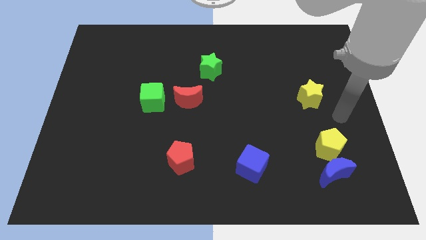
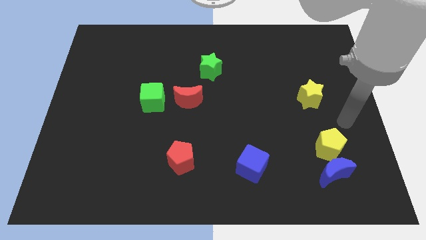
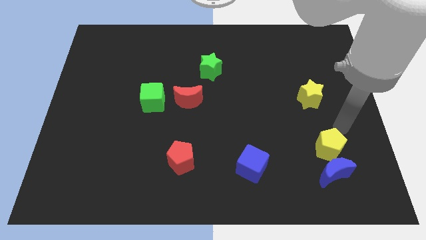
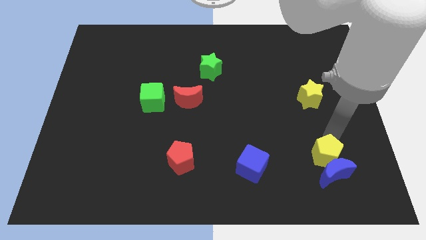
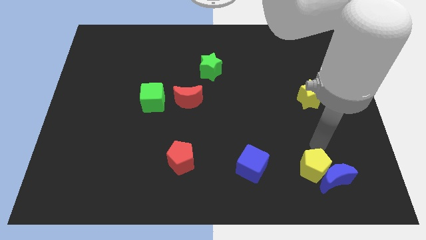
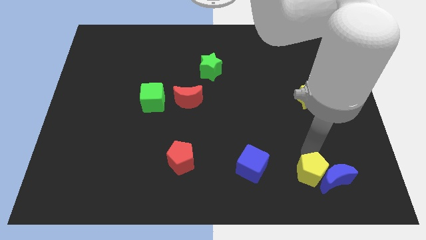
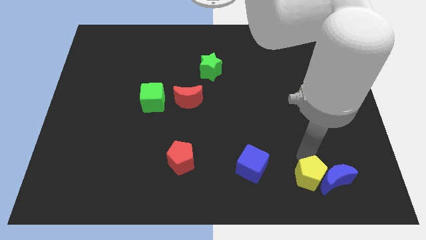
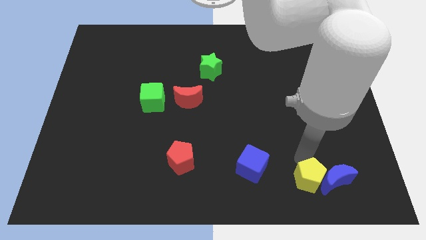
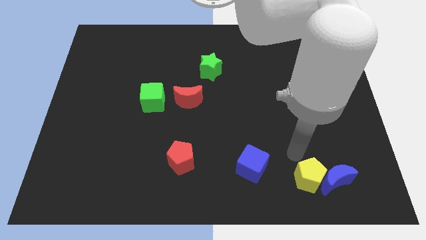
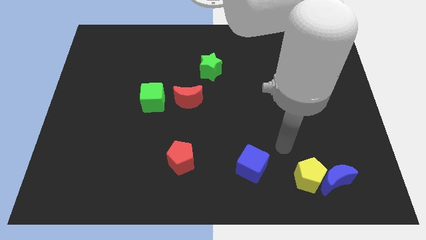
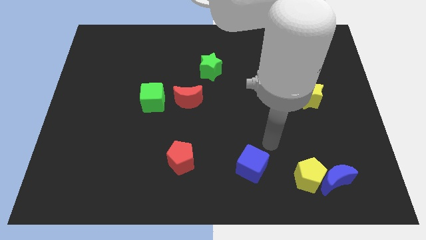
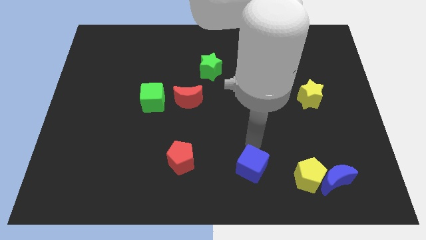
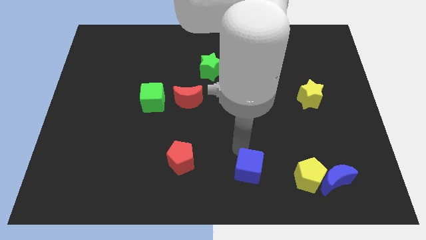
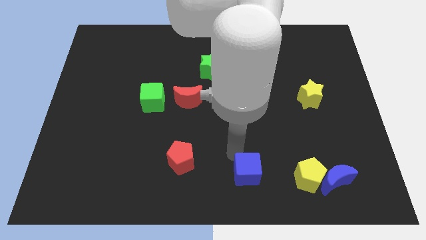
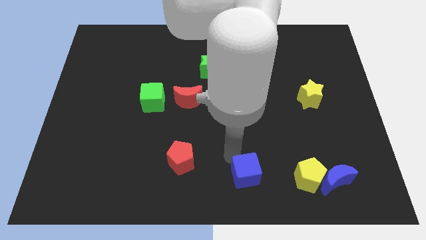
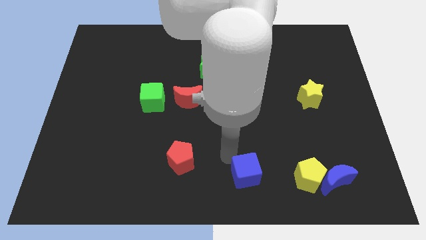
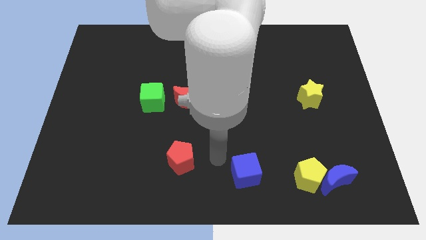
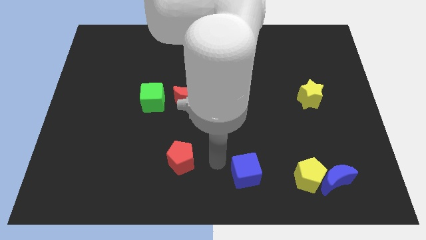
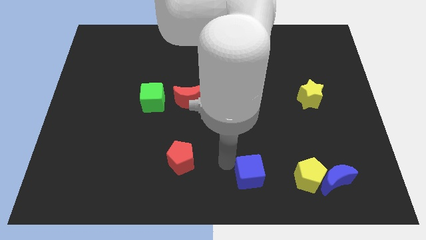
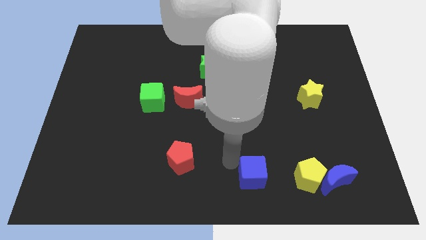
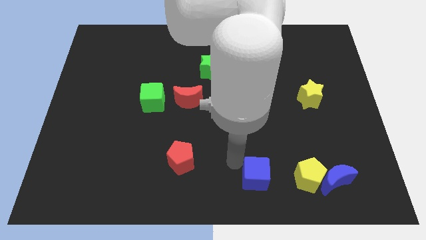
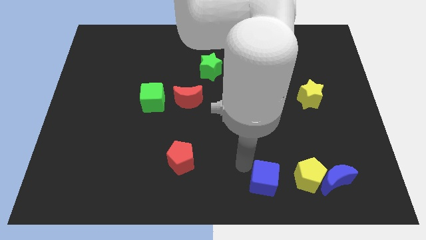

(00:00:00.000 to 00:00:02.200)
slide the blue cube diagonal to the green star

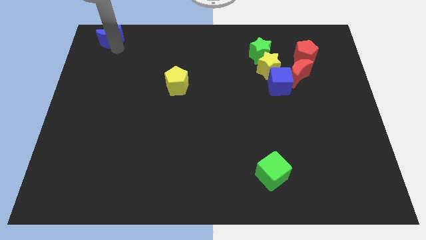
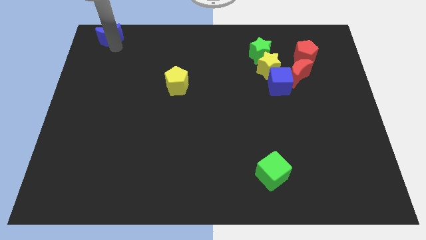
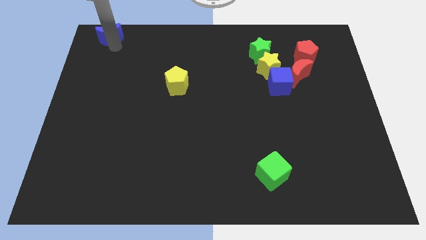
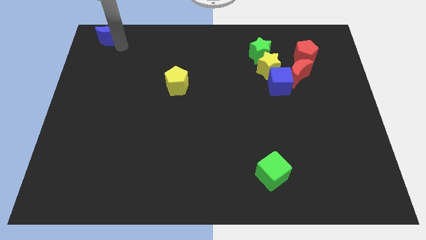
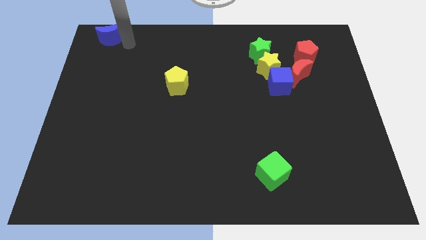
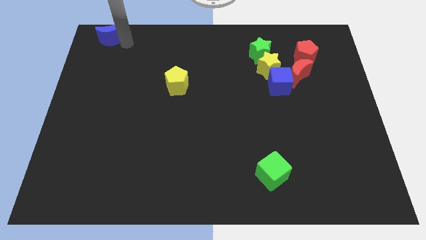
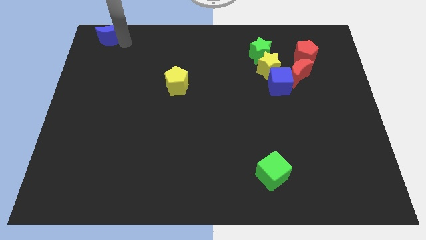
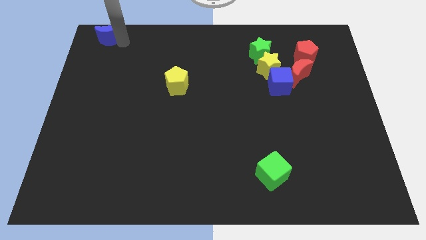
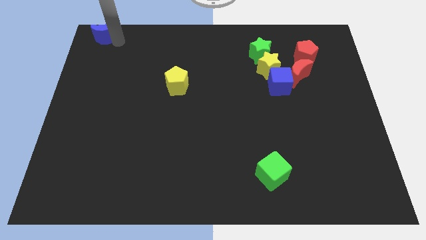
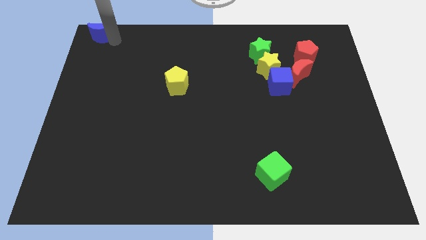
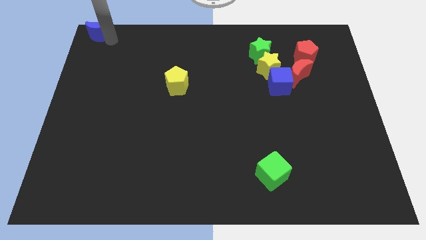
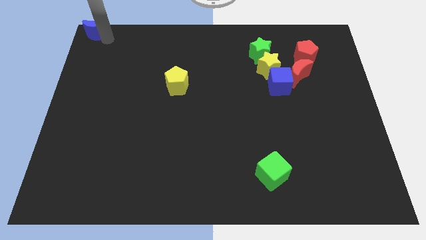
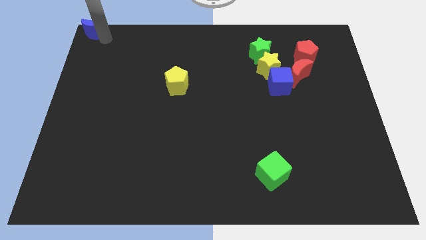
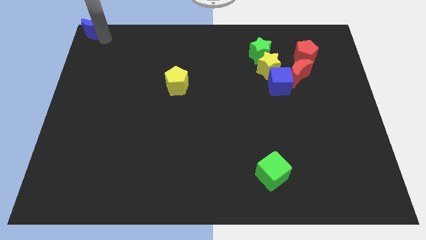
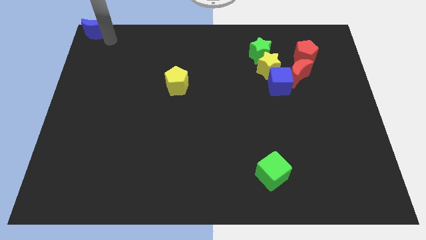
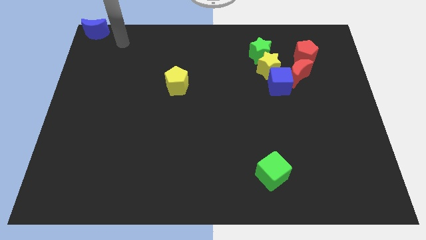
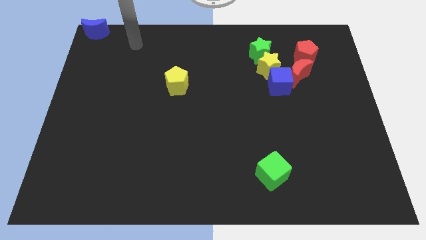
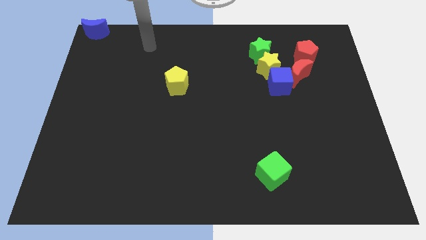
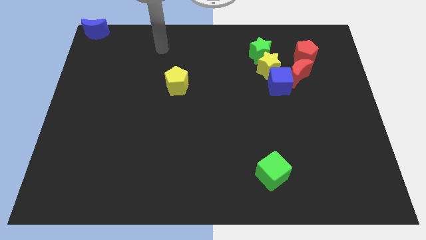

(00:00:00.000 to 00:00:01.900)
push the blue crescent to the top left corner of the board

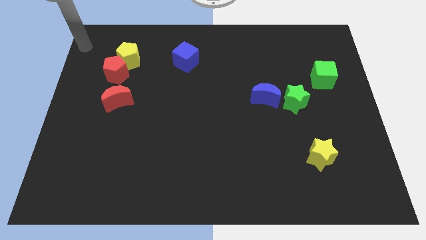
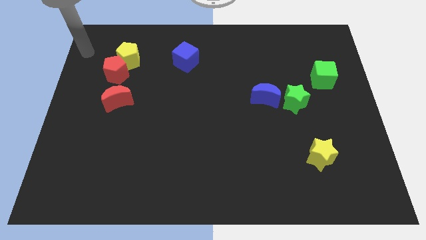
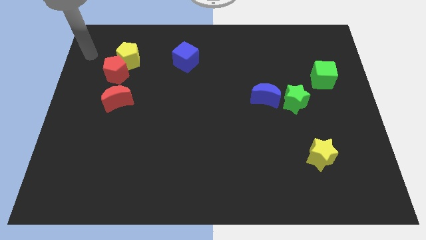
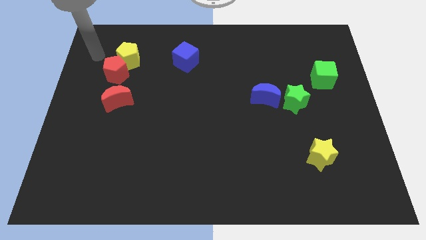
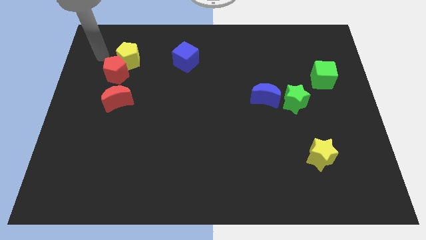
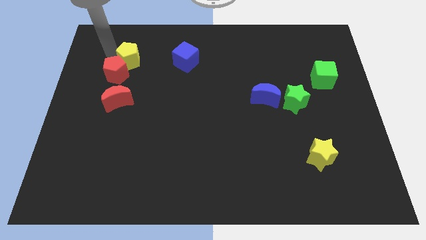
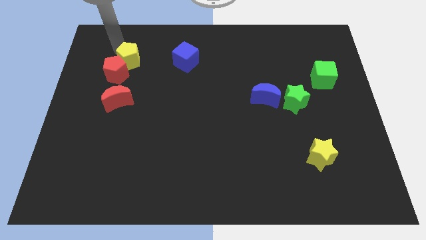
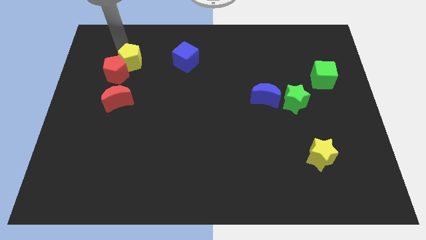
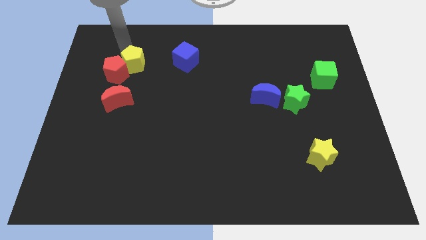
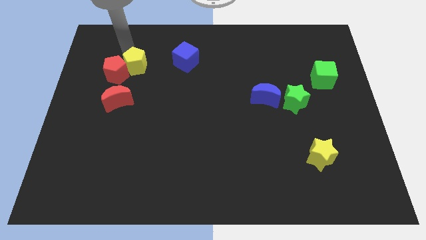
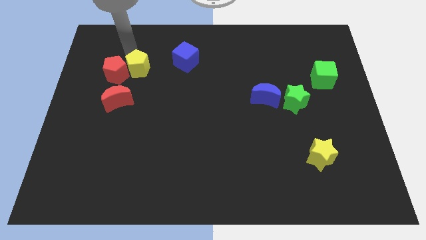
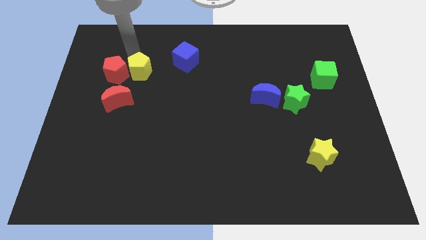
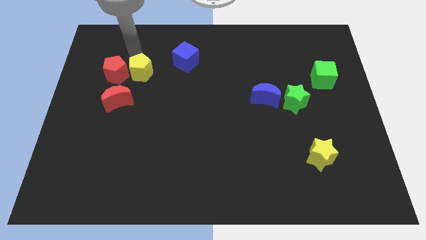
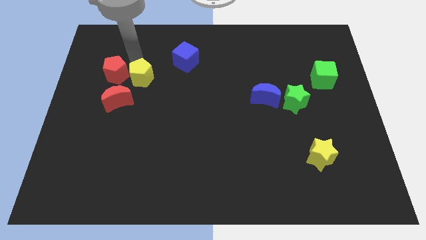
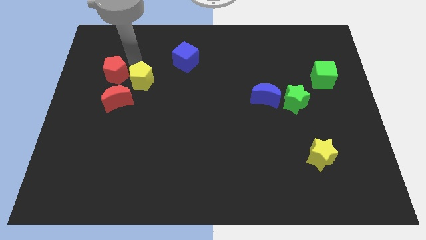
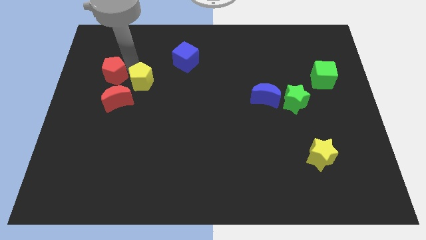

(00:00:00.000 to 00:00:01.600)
separate the yellow pentagon from the red pentagon

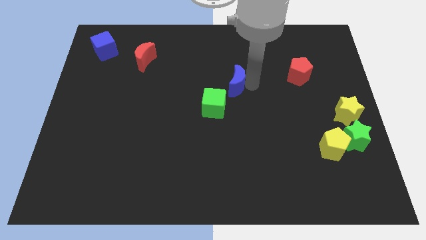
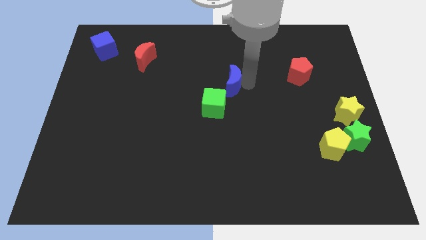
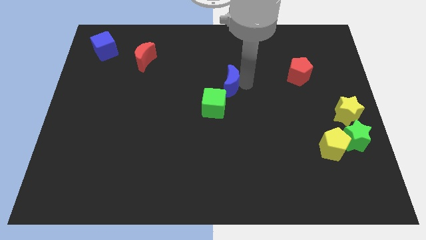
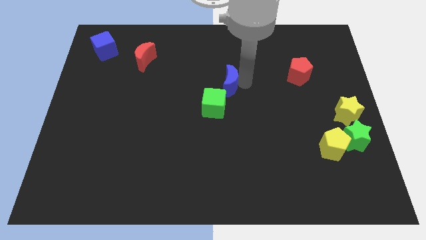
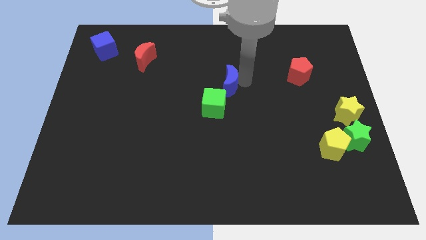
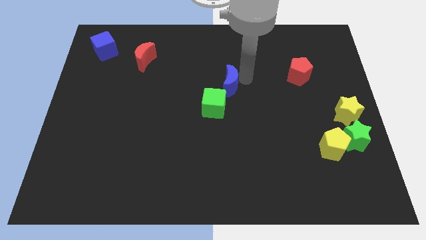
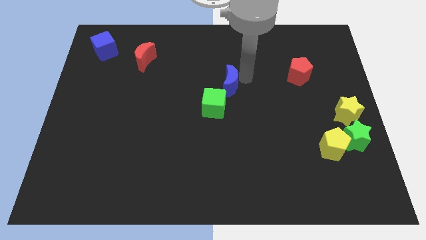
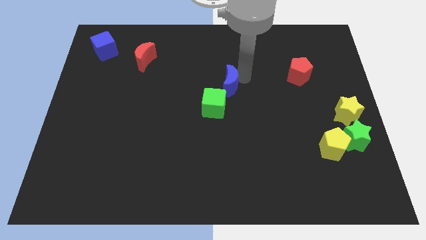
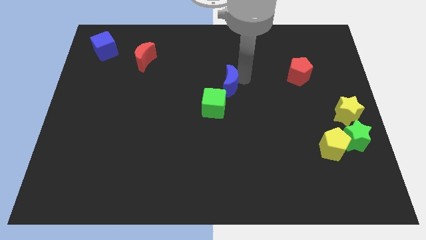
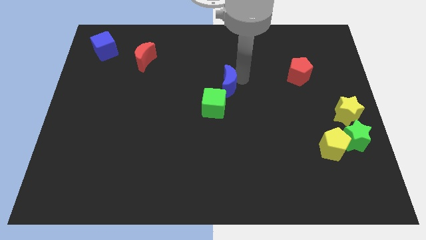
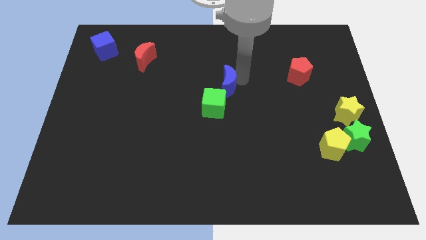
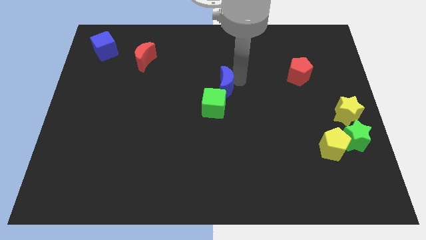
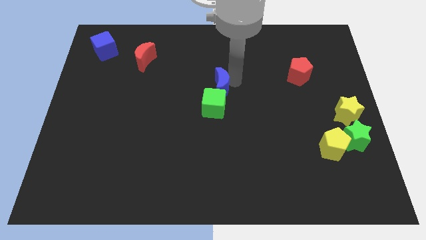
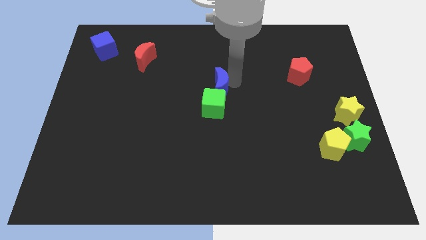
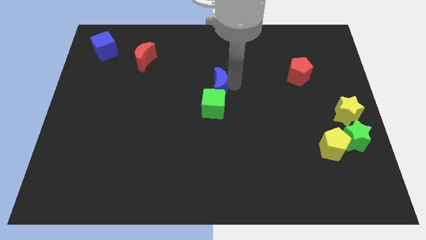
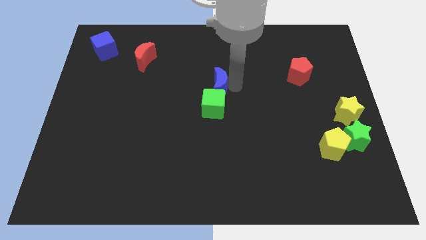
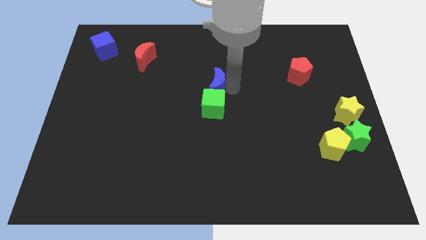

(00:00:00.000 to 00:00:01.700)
put the blue moon above the green cube

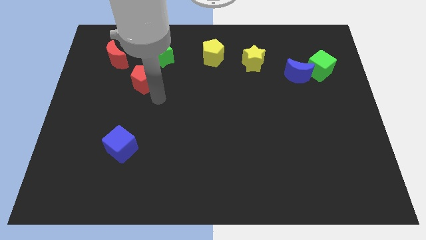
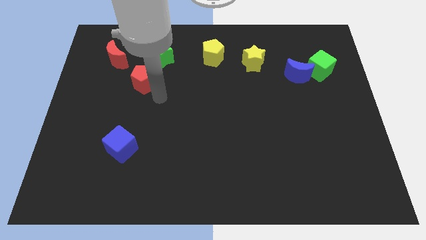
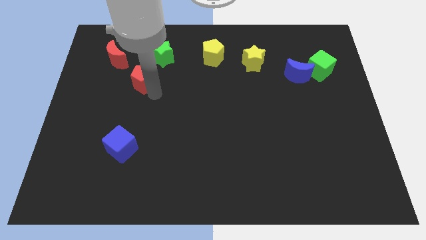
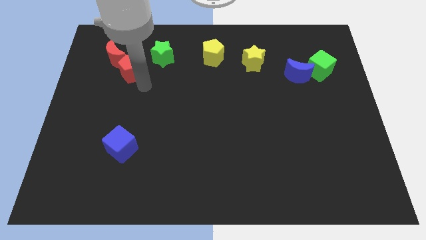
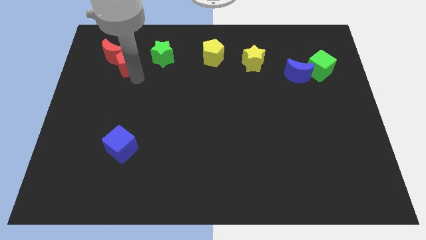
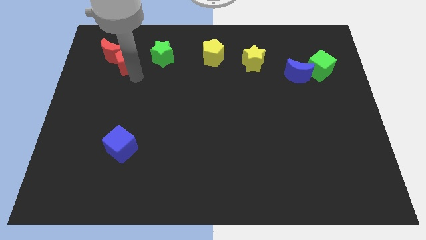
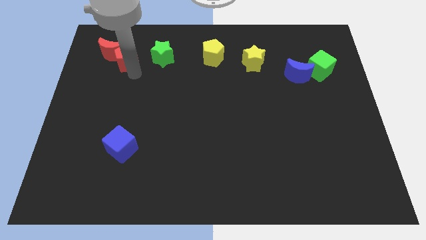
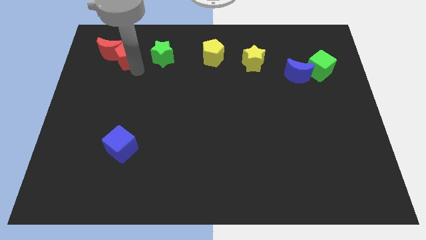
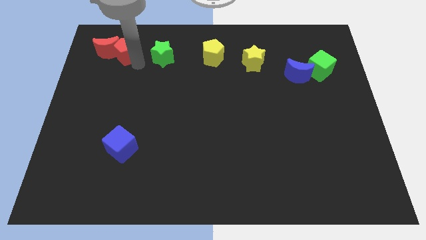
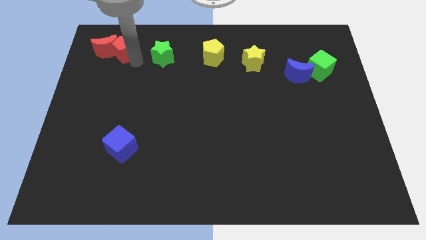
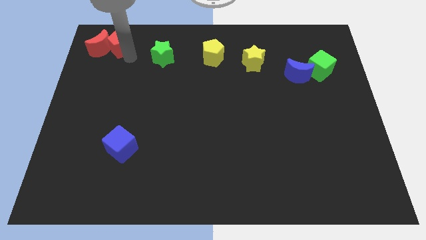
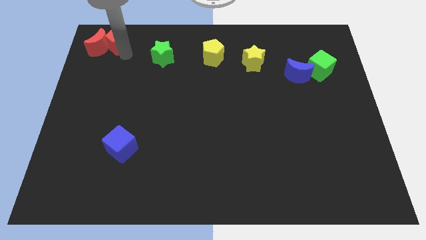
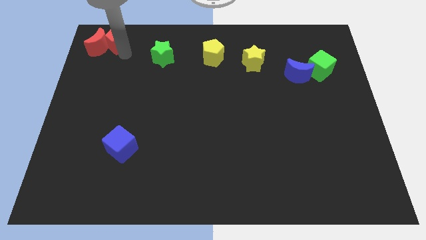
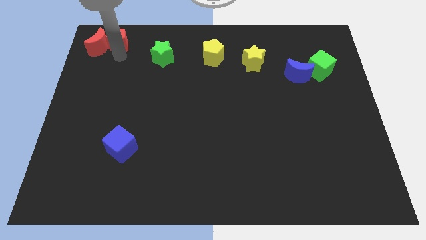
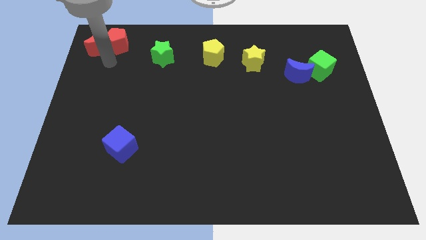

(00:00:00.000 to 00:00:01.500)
push both red crescent and red pentagon to the top left of the board
